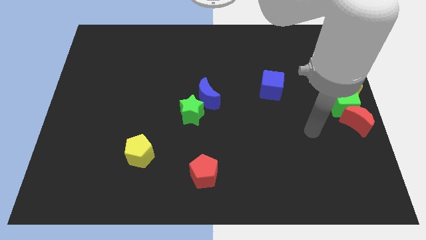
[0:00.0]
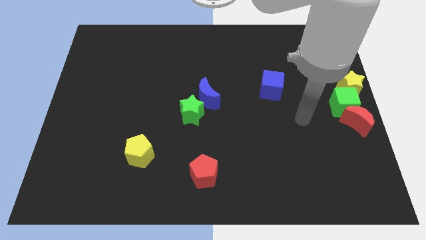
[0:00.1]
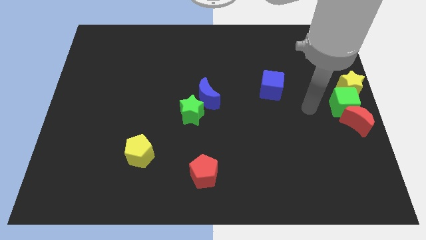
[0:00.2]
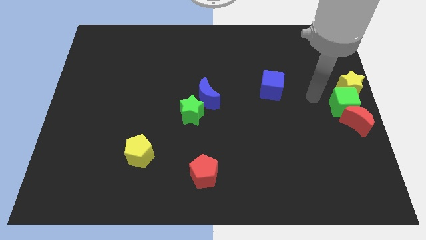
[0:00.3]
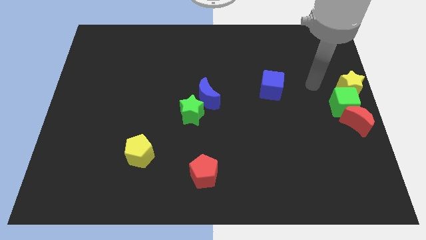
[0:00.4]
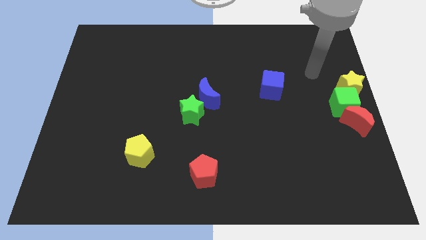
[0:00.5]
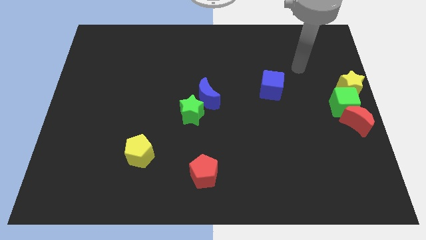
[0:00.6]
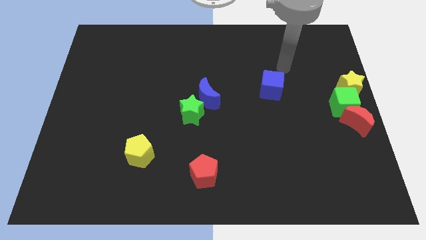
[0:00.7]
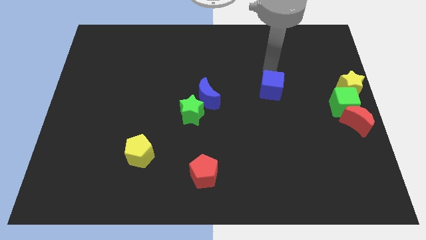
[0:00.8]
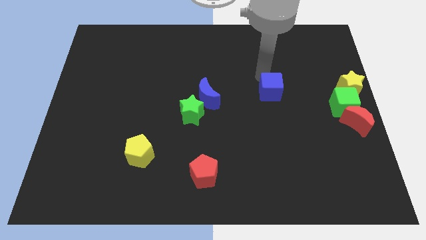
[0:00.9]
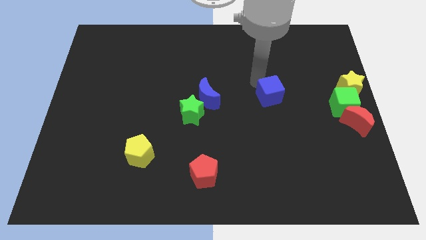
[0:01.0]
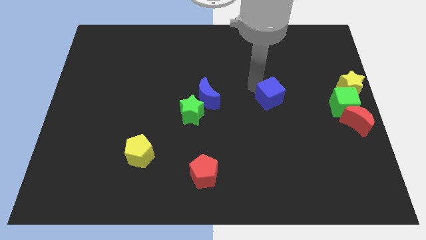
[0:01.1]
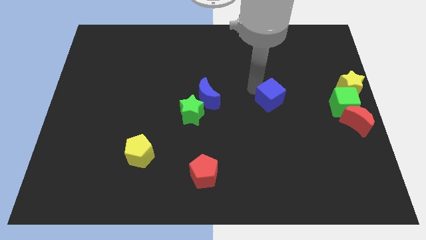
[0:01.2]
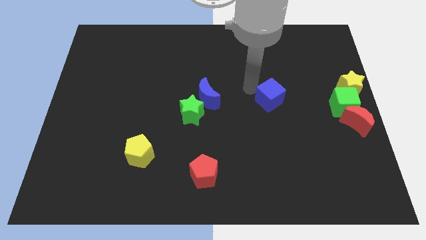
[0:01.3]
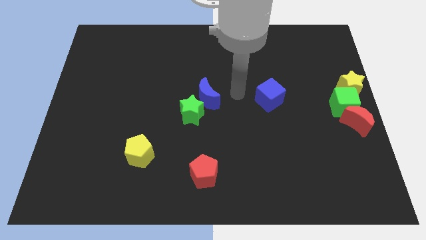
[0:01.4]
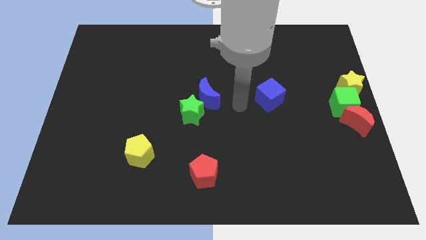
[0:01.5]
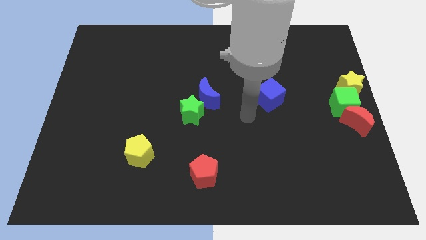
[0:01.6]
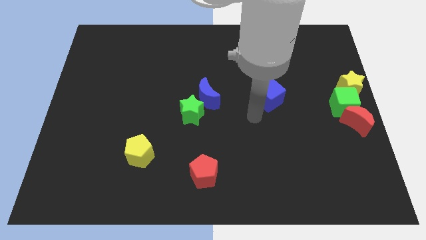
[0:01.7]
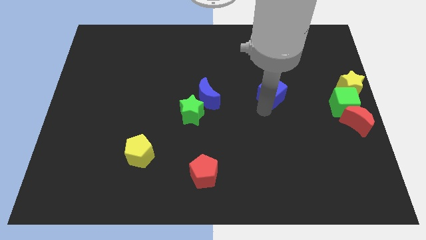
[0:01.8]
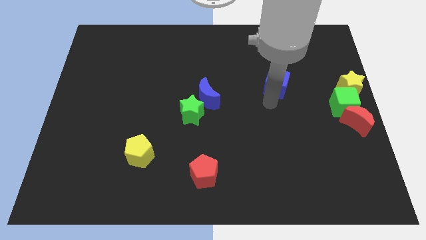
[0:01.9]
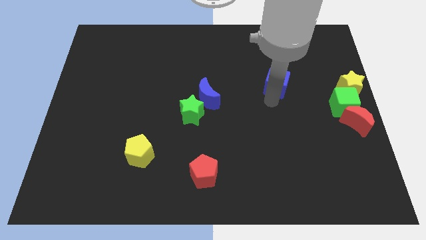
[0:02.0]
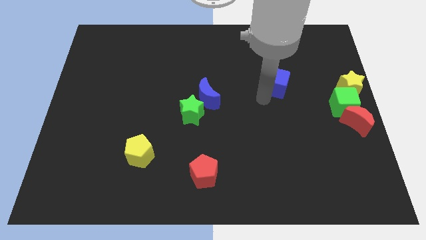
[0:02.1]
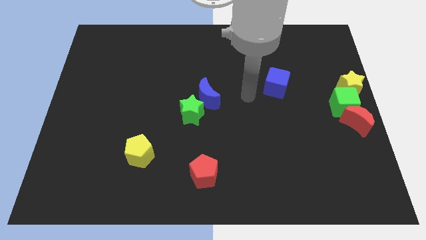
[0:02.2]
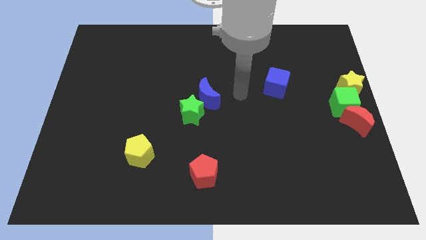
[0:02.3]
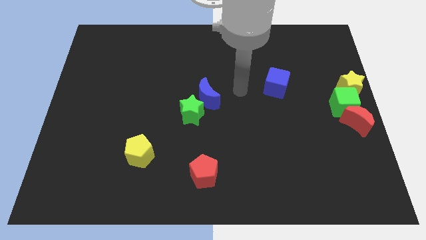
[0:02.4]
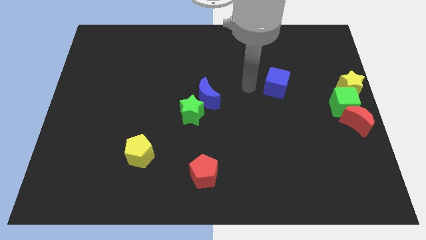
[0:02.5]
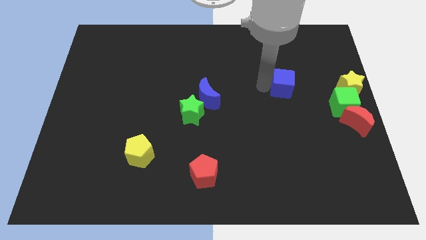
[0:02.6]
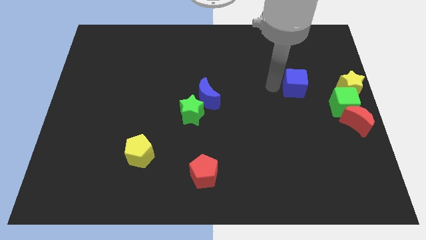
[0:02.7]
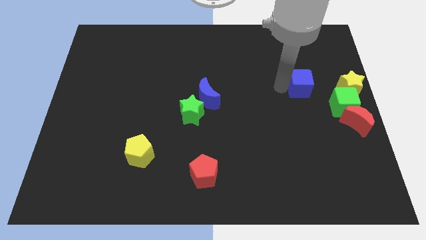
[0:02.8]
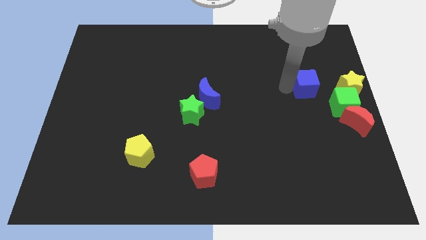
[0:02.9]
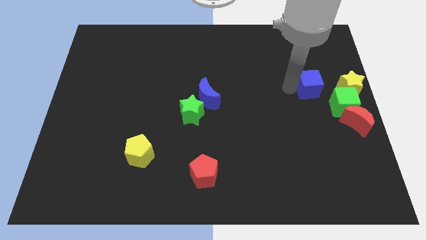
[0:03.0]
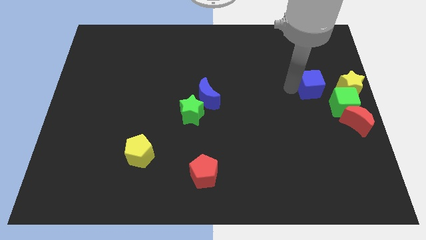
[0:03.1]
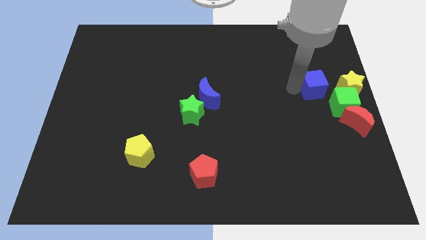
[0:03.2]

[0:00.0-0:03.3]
move the blue cube to the left of the yellow star

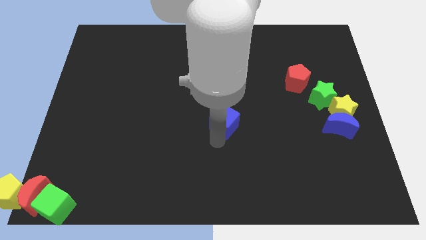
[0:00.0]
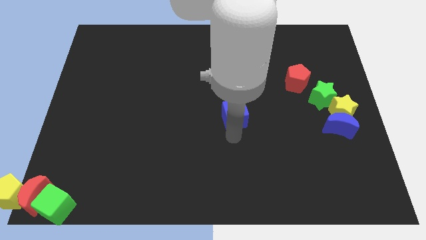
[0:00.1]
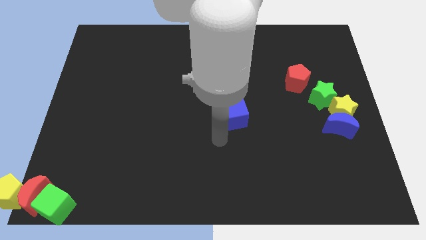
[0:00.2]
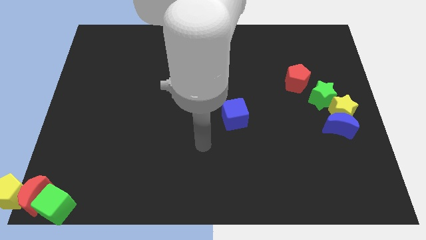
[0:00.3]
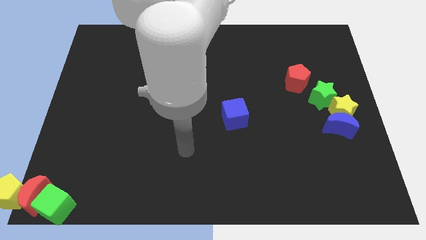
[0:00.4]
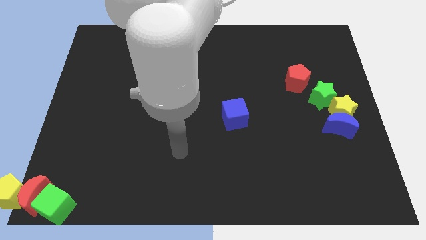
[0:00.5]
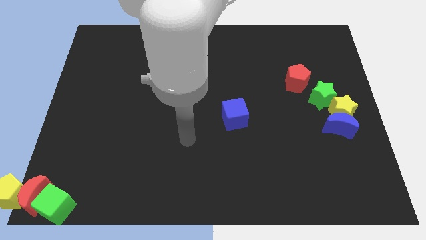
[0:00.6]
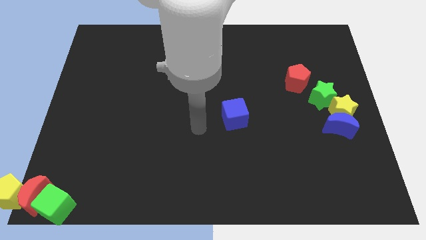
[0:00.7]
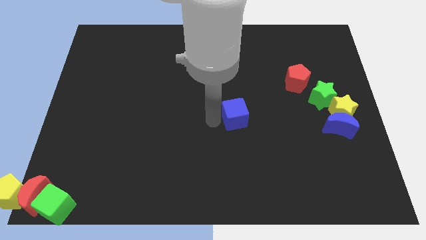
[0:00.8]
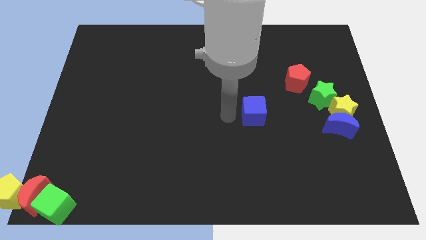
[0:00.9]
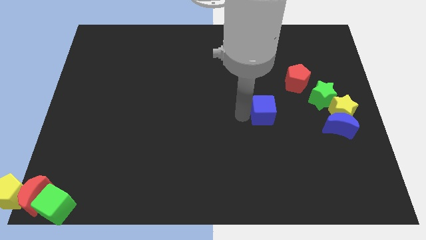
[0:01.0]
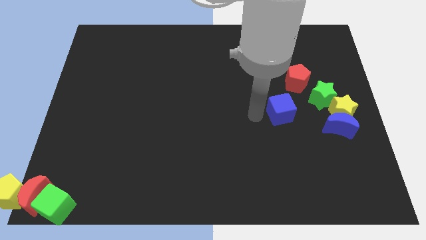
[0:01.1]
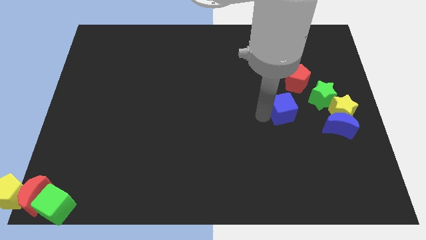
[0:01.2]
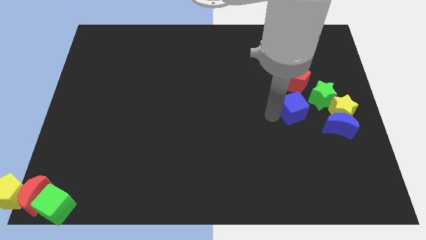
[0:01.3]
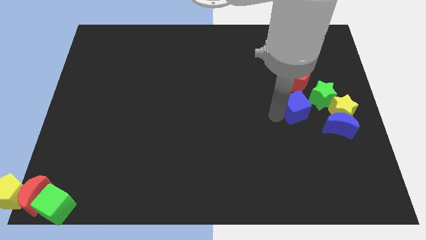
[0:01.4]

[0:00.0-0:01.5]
put the blue cube below the red pentagon

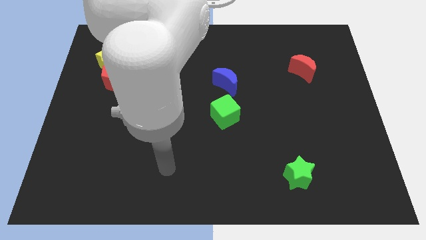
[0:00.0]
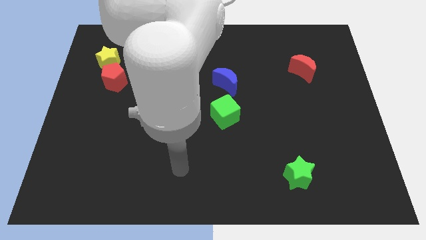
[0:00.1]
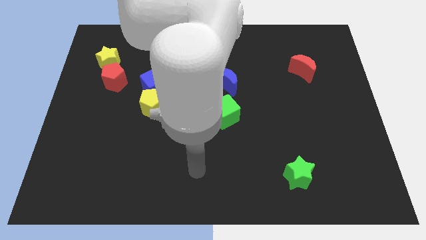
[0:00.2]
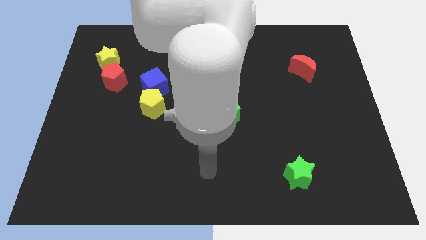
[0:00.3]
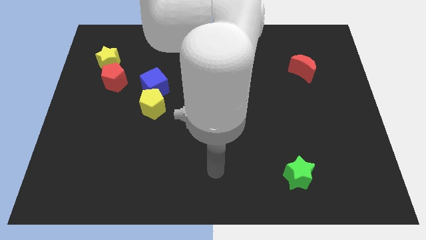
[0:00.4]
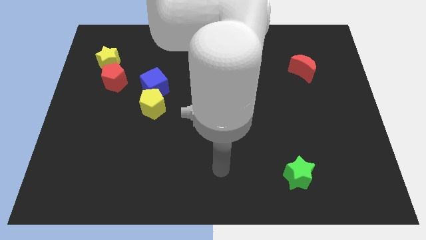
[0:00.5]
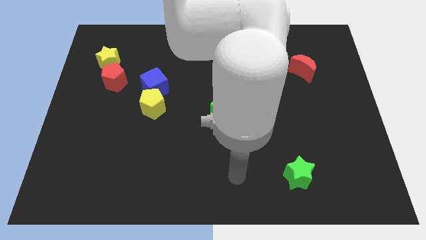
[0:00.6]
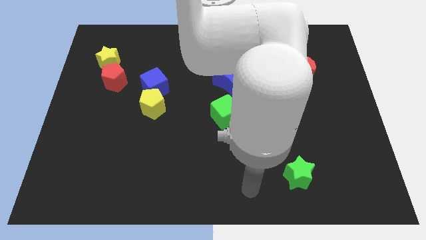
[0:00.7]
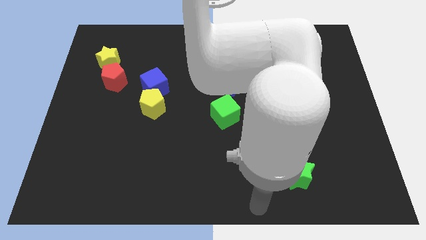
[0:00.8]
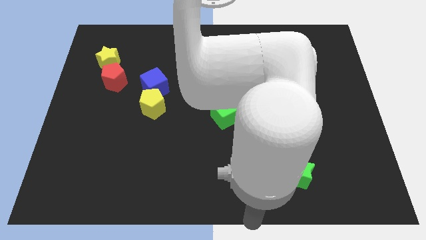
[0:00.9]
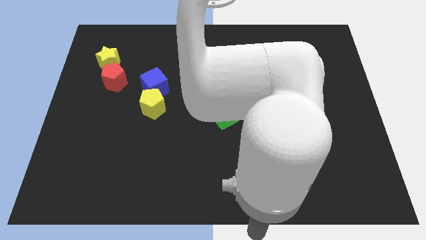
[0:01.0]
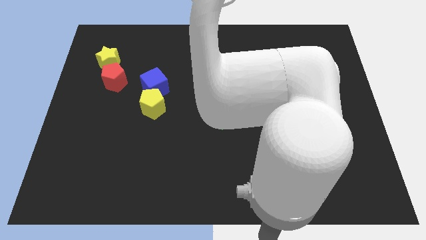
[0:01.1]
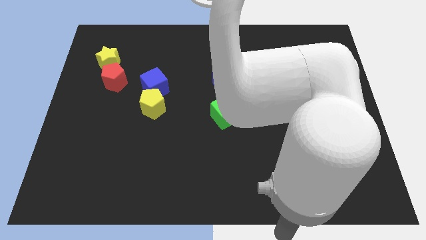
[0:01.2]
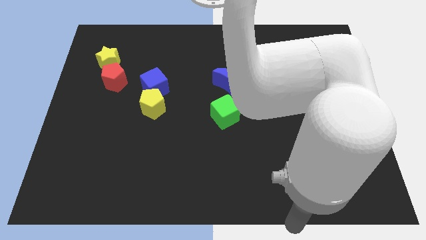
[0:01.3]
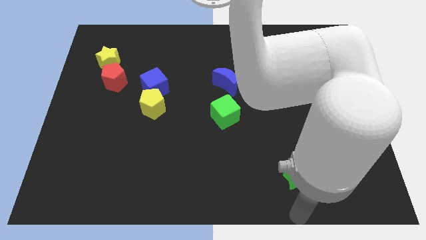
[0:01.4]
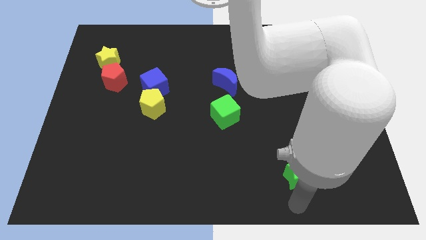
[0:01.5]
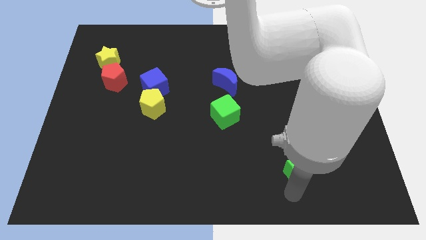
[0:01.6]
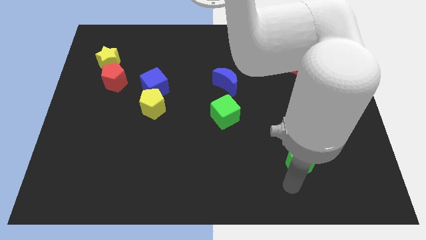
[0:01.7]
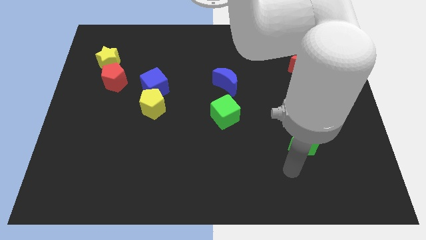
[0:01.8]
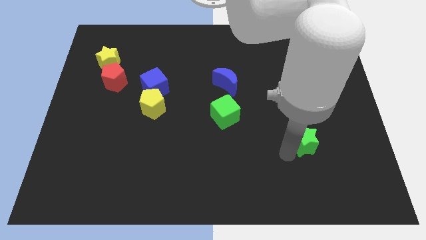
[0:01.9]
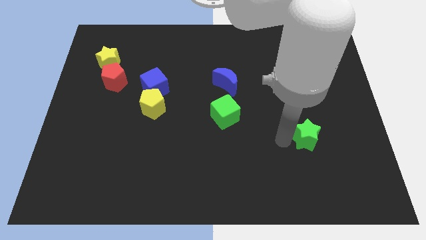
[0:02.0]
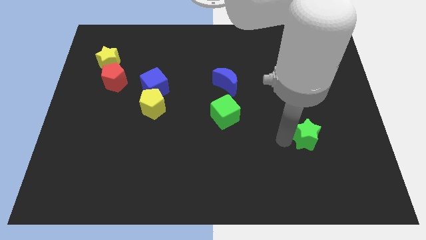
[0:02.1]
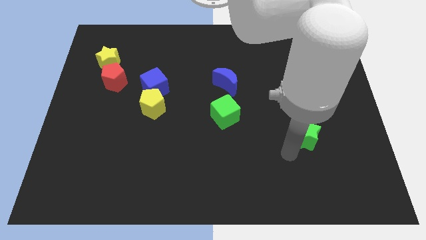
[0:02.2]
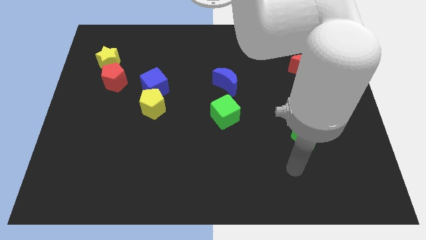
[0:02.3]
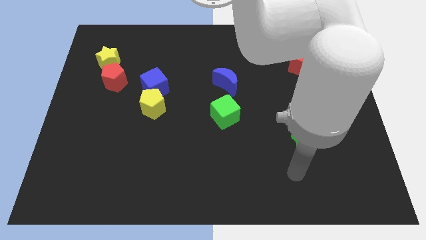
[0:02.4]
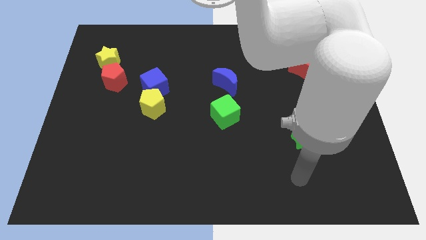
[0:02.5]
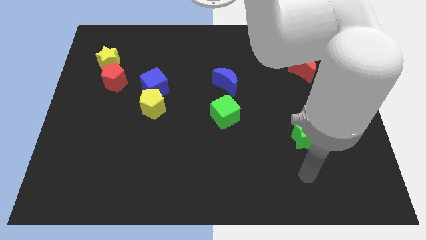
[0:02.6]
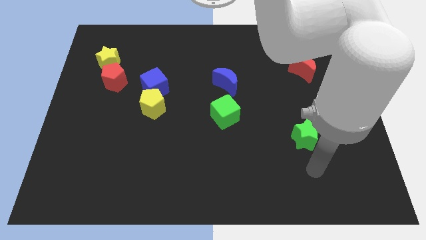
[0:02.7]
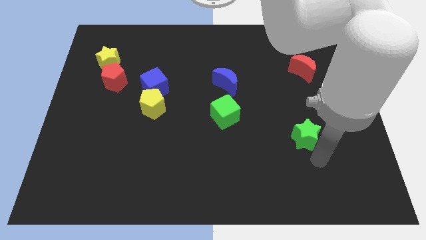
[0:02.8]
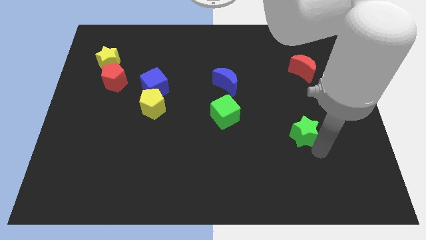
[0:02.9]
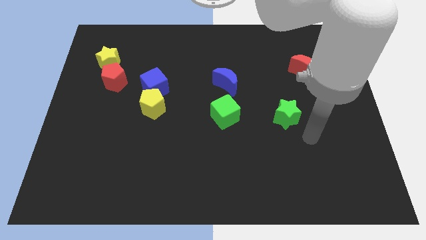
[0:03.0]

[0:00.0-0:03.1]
put the green star parallel to the green cube

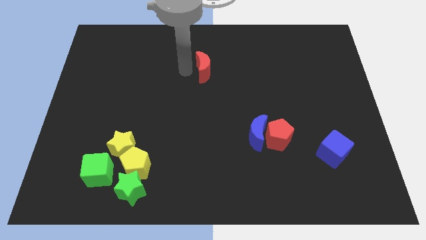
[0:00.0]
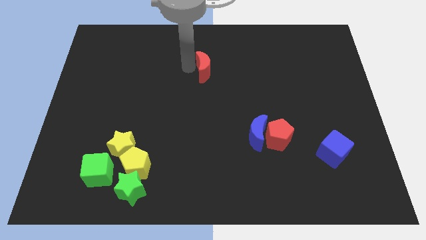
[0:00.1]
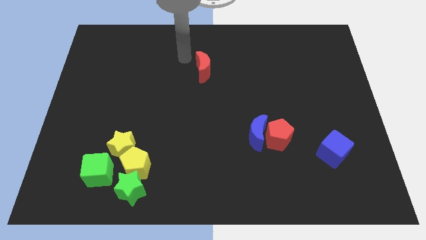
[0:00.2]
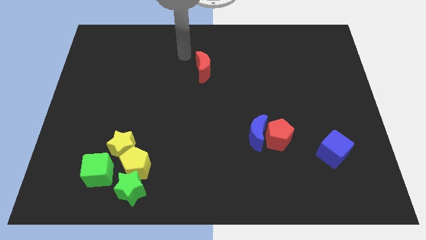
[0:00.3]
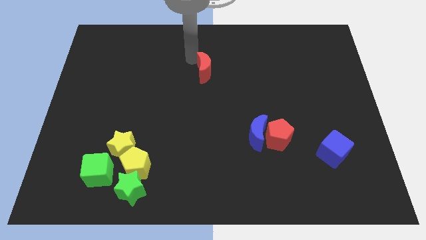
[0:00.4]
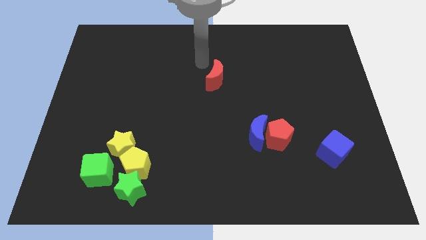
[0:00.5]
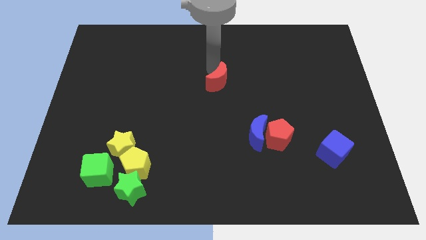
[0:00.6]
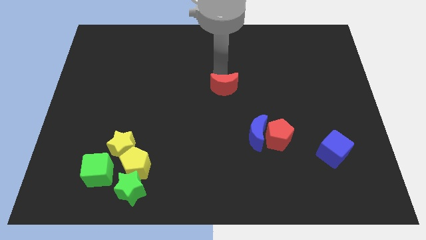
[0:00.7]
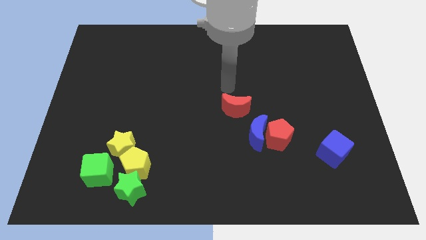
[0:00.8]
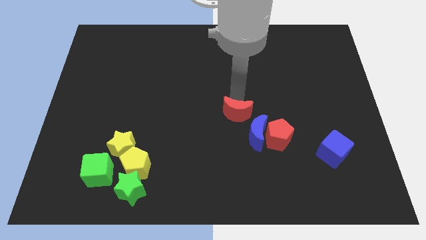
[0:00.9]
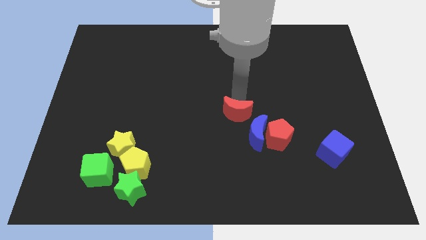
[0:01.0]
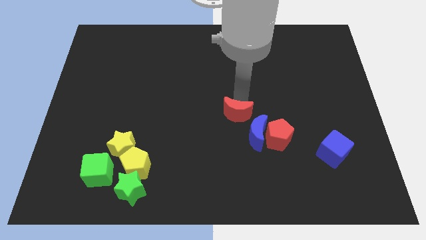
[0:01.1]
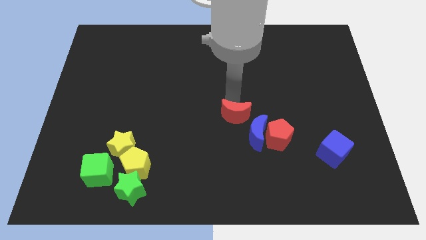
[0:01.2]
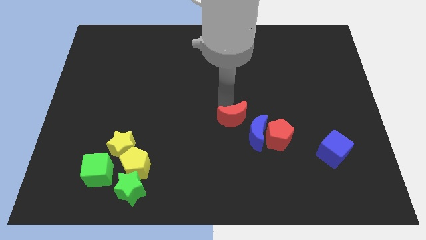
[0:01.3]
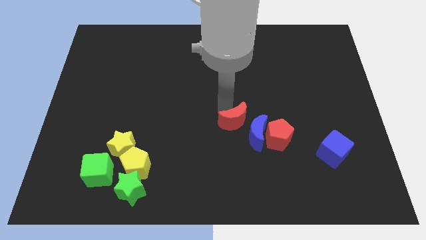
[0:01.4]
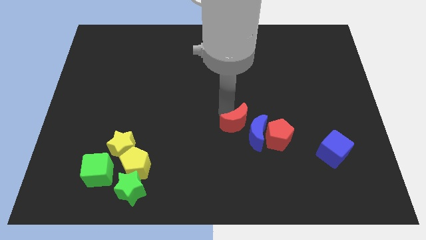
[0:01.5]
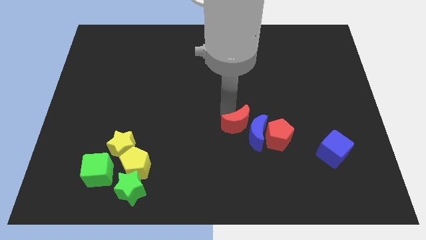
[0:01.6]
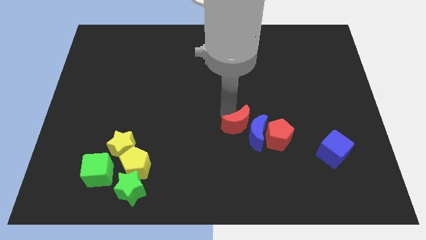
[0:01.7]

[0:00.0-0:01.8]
place the red moon left to the blue moon
